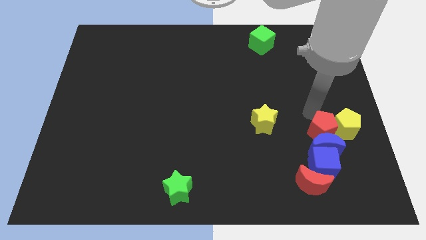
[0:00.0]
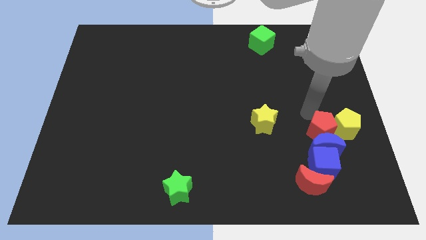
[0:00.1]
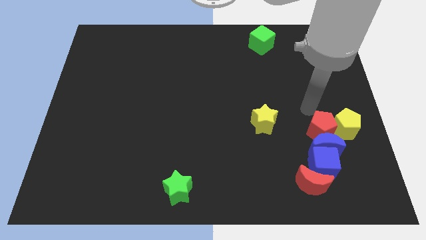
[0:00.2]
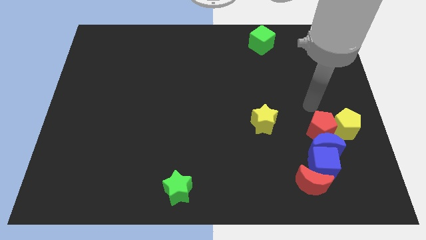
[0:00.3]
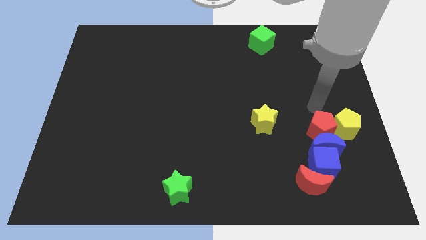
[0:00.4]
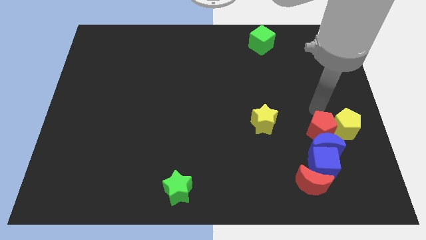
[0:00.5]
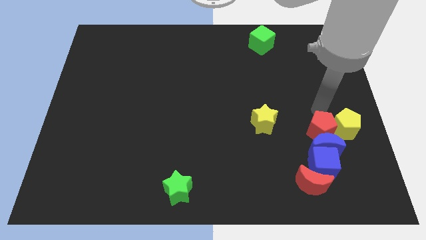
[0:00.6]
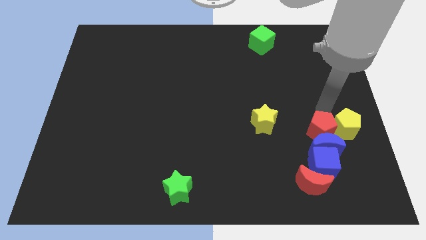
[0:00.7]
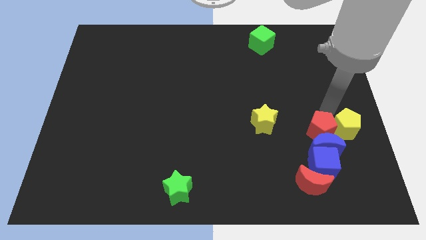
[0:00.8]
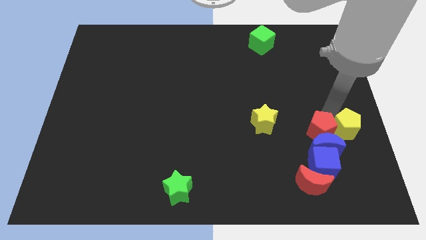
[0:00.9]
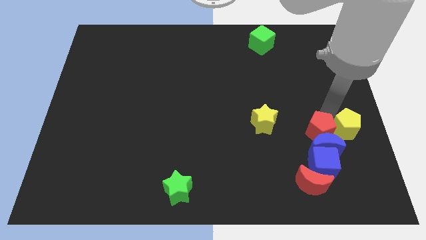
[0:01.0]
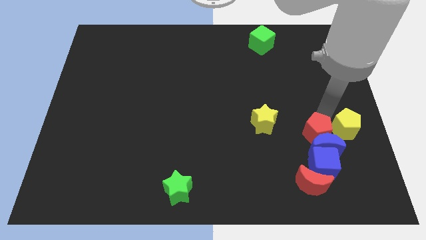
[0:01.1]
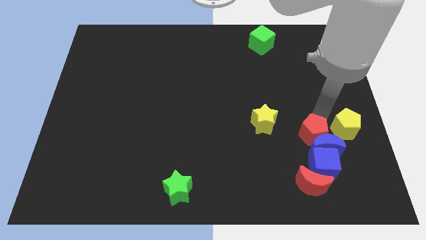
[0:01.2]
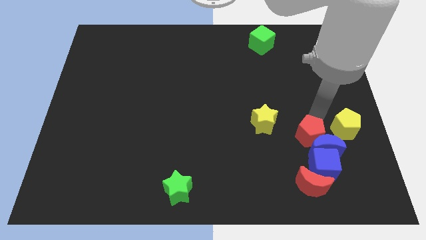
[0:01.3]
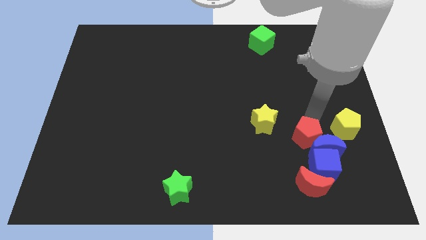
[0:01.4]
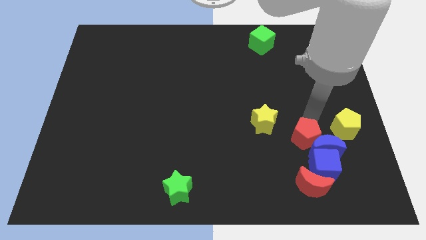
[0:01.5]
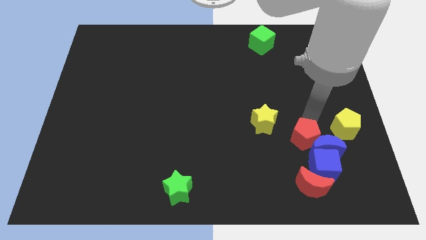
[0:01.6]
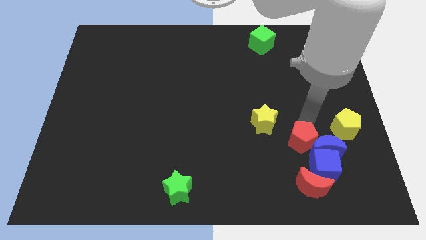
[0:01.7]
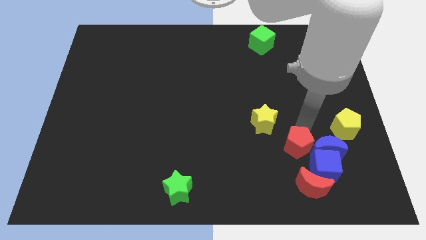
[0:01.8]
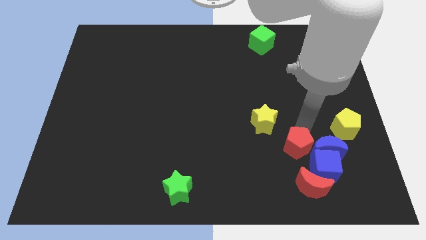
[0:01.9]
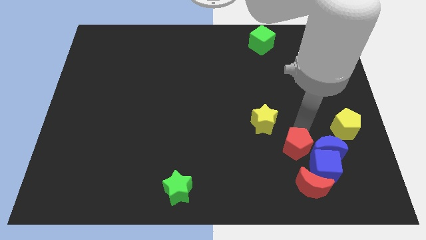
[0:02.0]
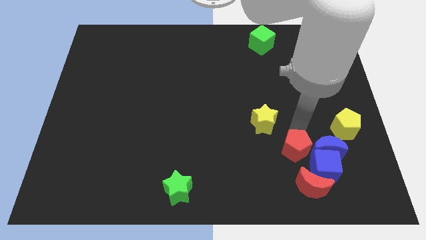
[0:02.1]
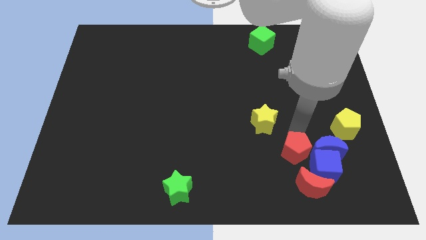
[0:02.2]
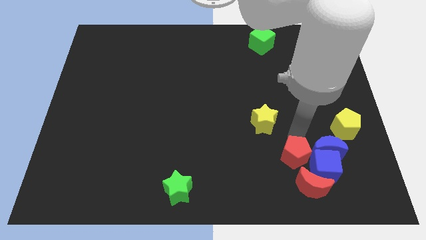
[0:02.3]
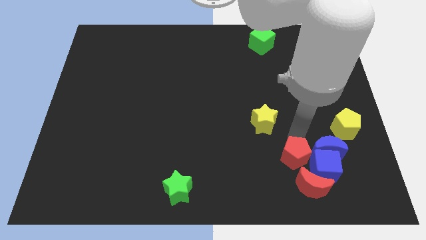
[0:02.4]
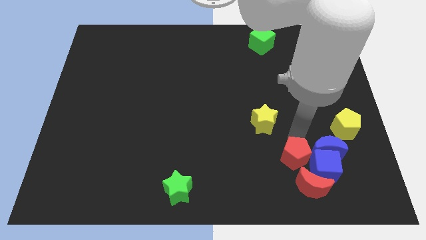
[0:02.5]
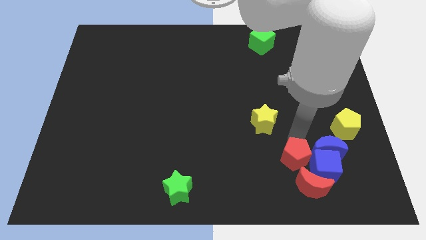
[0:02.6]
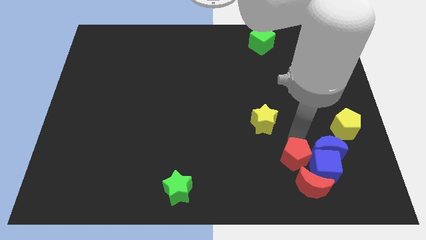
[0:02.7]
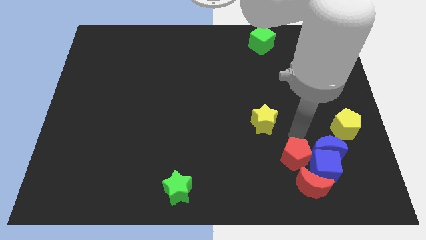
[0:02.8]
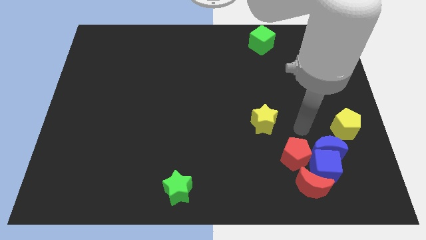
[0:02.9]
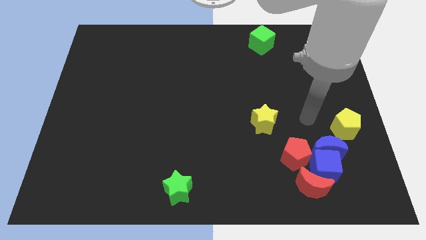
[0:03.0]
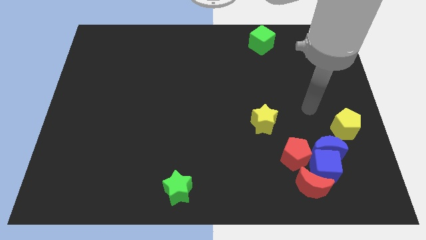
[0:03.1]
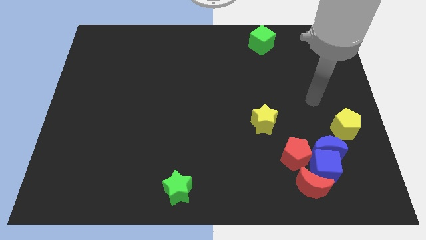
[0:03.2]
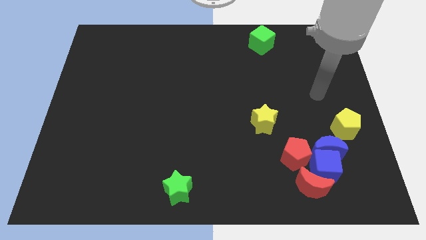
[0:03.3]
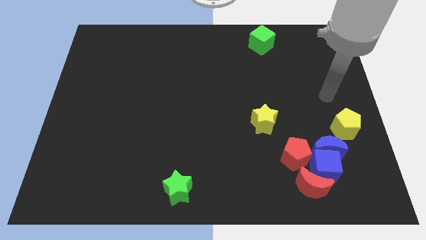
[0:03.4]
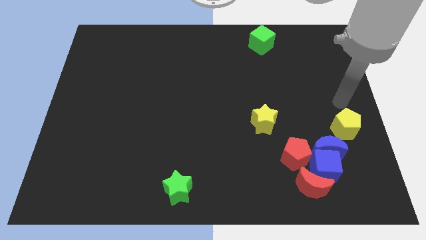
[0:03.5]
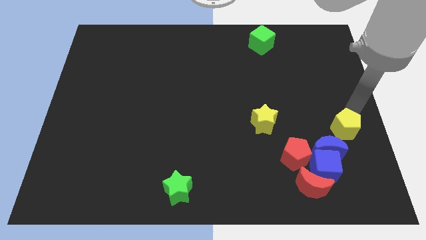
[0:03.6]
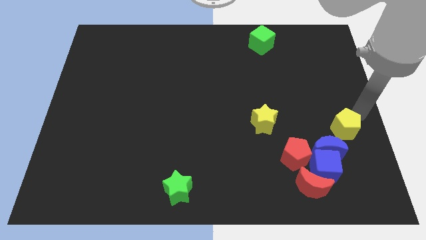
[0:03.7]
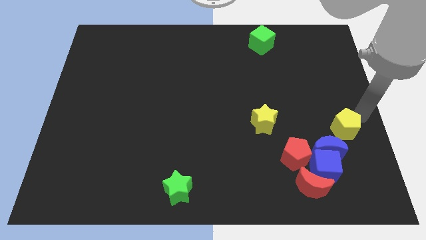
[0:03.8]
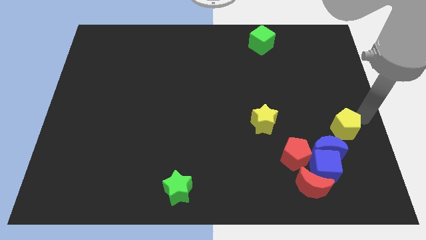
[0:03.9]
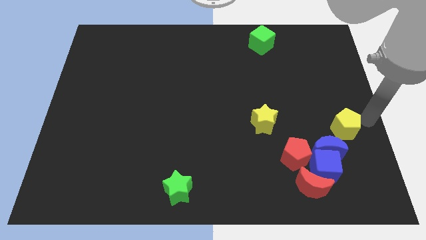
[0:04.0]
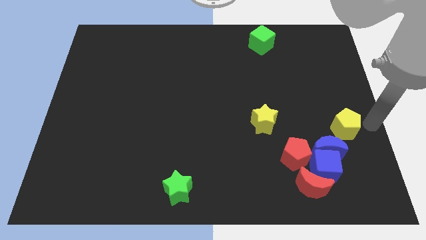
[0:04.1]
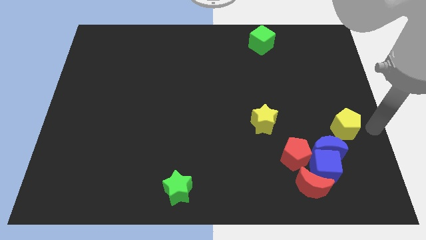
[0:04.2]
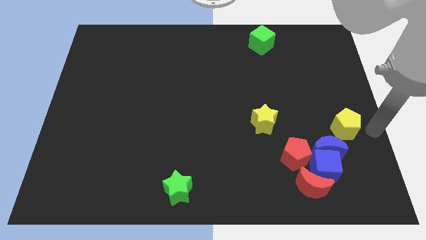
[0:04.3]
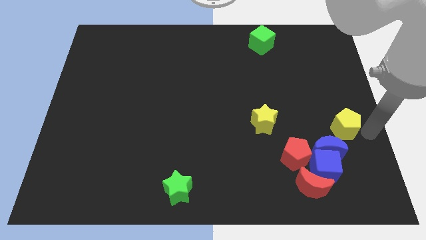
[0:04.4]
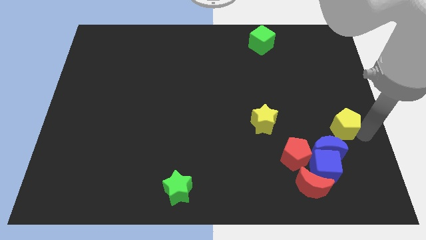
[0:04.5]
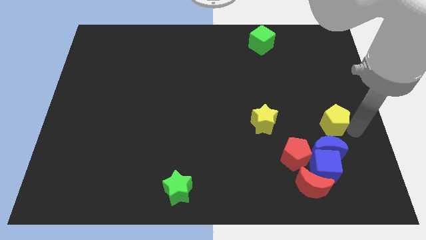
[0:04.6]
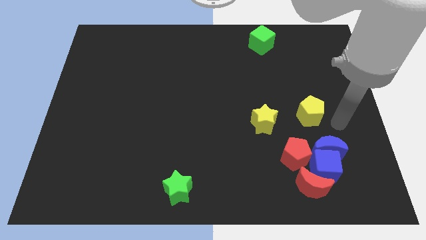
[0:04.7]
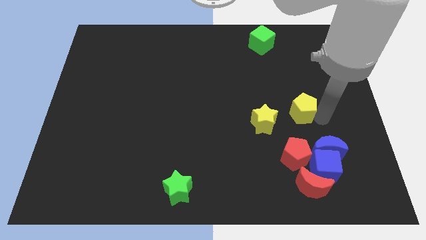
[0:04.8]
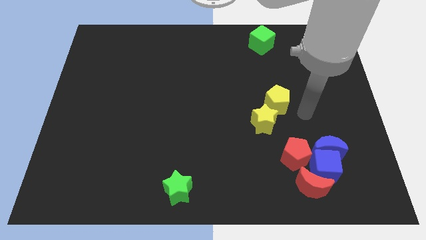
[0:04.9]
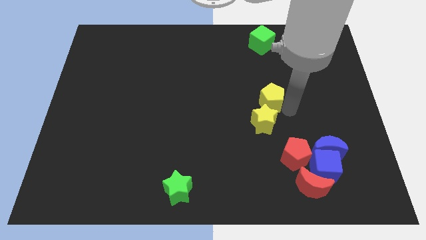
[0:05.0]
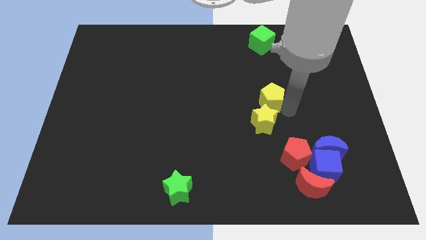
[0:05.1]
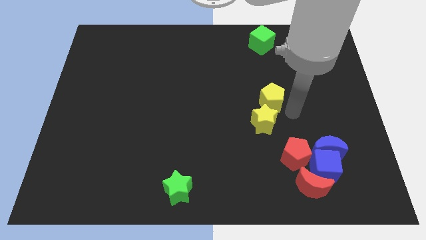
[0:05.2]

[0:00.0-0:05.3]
push the yellow pentagon to the top of the yellow star

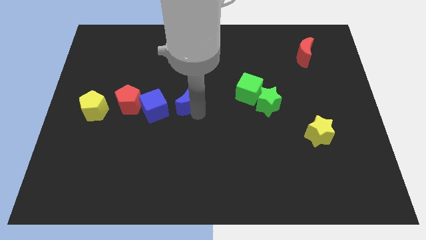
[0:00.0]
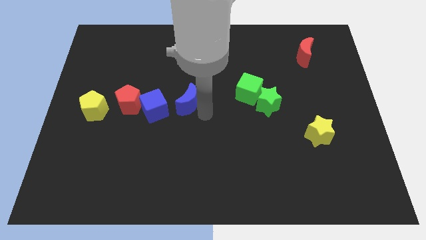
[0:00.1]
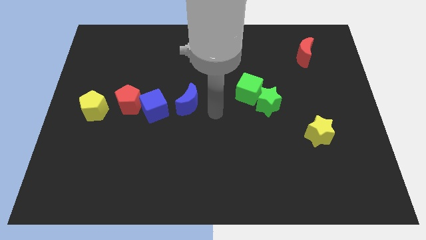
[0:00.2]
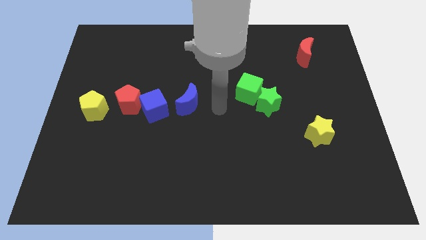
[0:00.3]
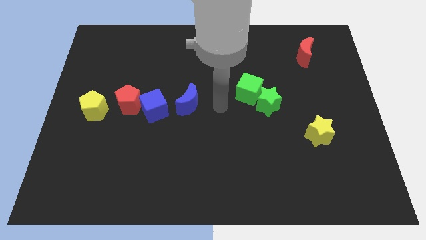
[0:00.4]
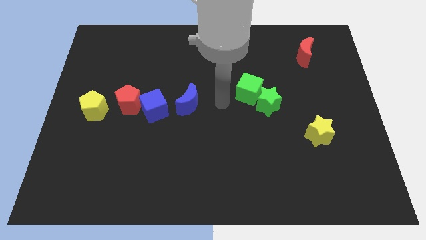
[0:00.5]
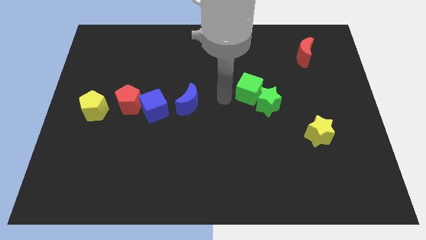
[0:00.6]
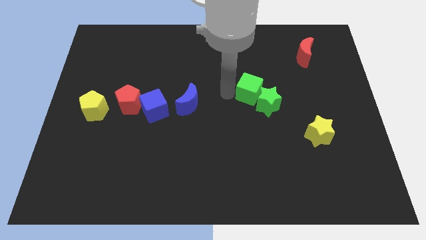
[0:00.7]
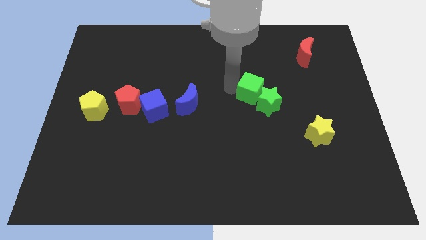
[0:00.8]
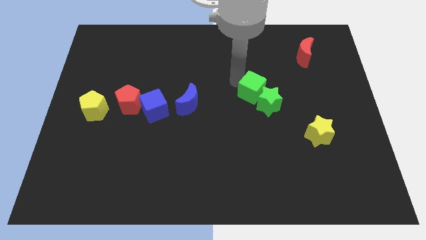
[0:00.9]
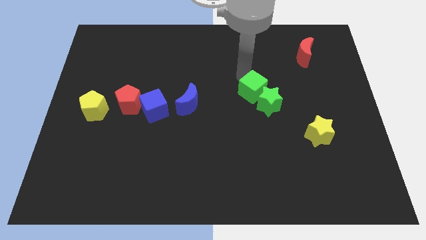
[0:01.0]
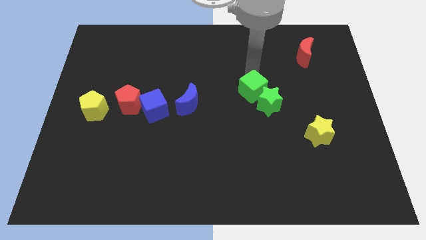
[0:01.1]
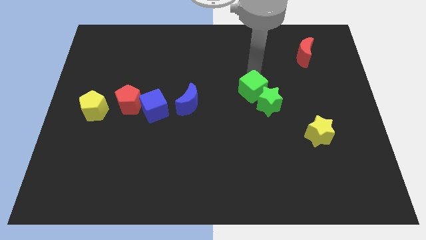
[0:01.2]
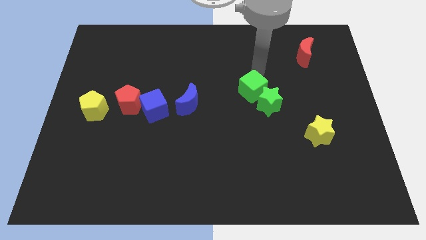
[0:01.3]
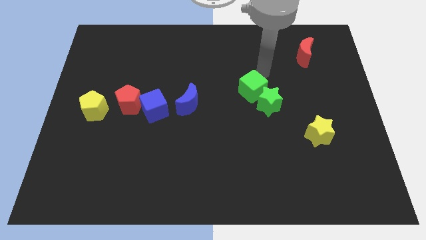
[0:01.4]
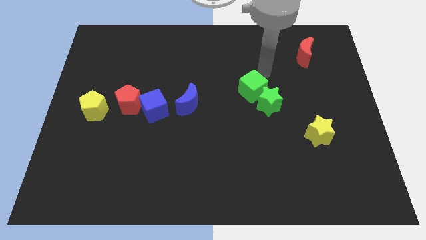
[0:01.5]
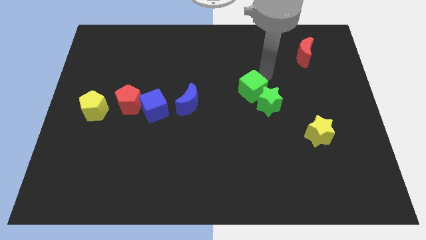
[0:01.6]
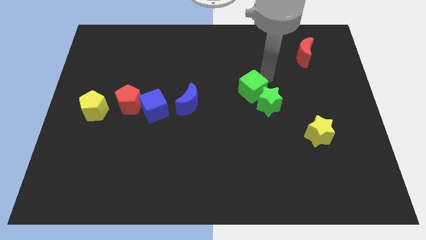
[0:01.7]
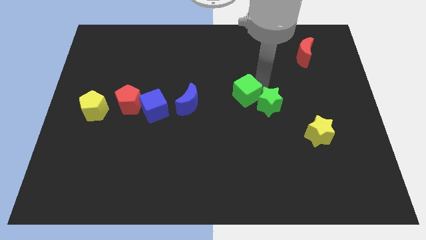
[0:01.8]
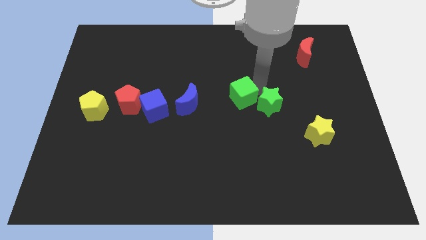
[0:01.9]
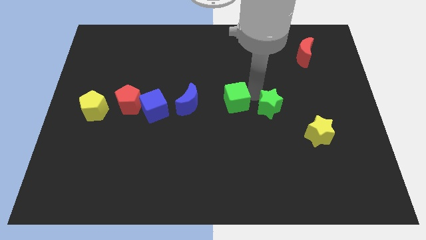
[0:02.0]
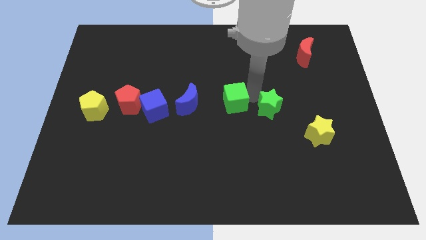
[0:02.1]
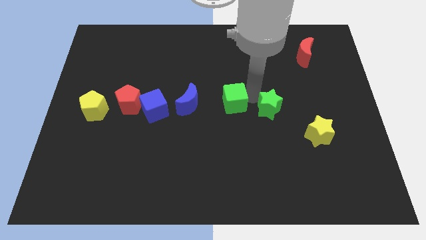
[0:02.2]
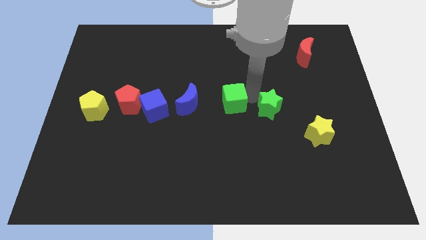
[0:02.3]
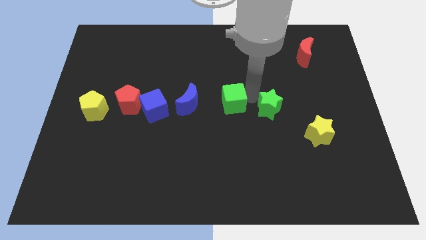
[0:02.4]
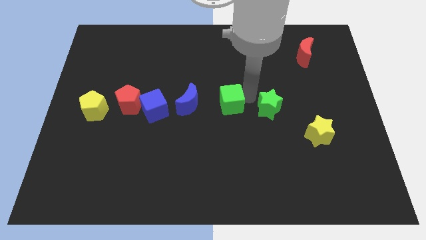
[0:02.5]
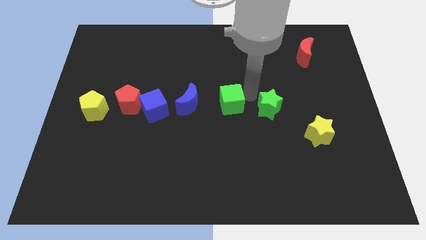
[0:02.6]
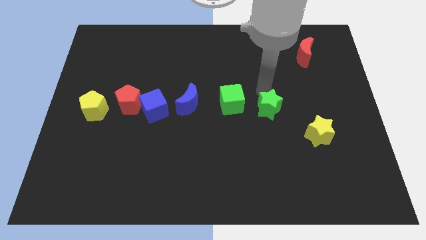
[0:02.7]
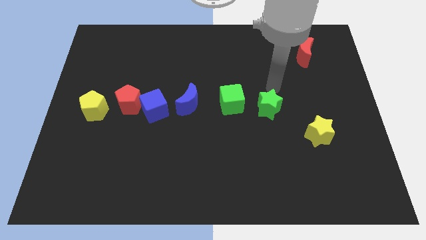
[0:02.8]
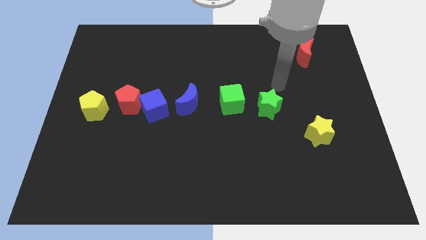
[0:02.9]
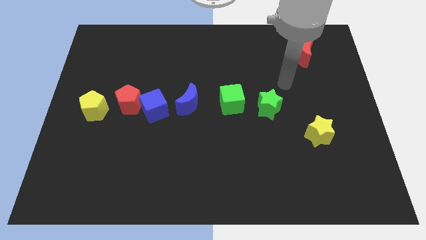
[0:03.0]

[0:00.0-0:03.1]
move the green cube to the left of the green star

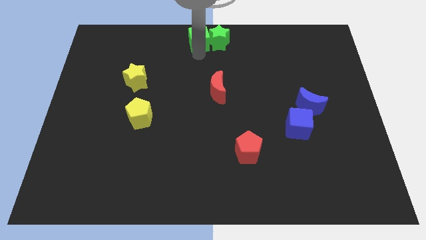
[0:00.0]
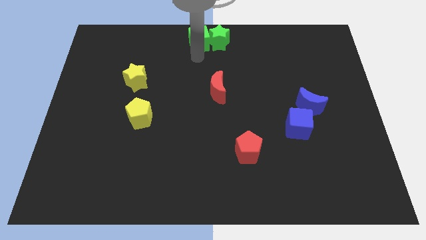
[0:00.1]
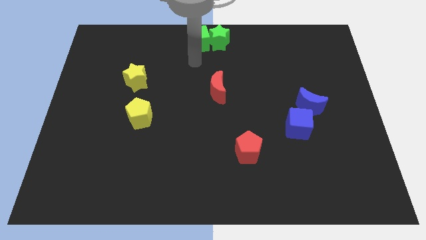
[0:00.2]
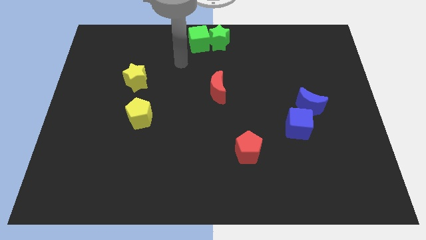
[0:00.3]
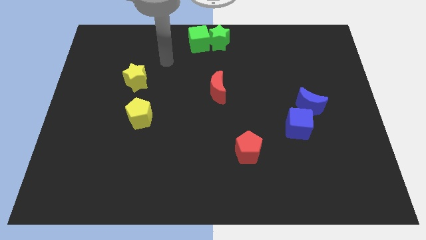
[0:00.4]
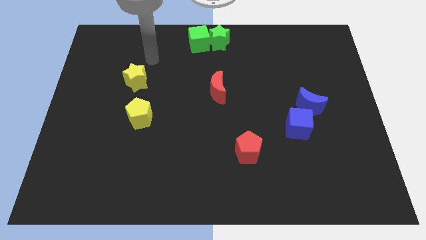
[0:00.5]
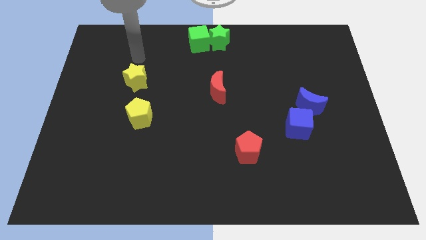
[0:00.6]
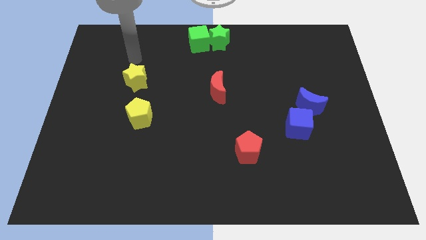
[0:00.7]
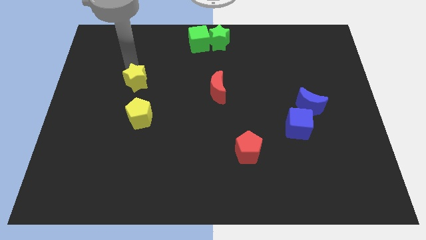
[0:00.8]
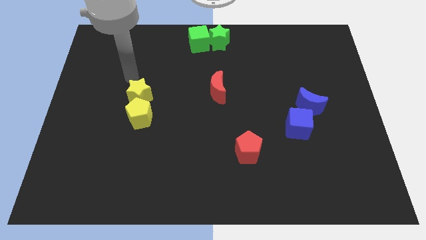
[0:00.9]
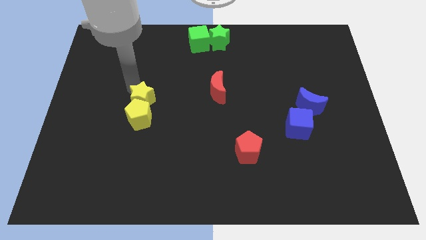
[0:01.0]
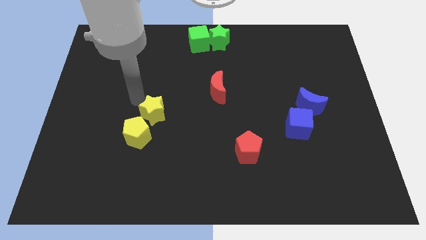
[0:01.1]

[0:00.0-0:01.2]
place the yellow star at the top of yellow pentagon
